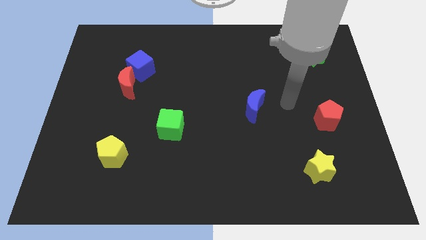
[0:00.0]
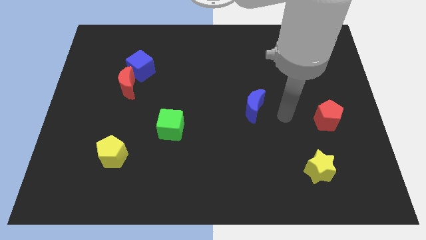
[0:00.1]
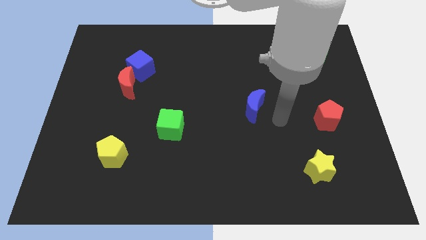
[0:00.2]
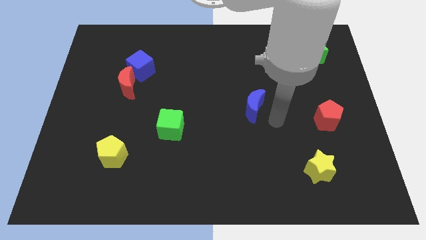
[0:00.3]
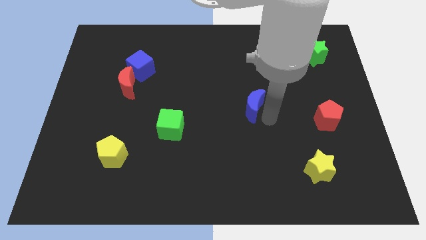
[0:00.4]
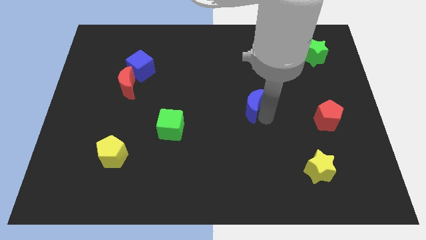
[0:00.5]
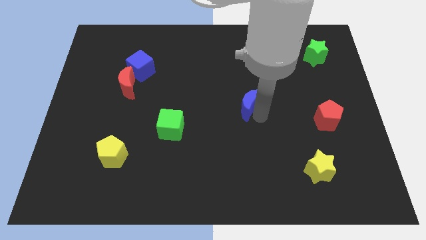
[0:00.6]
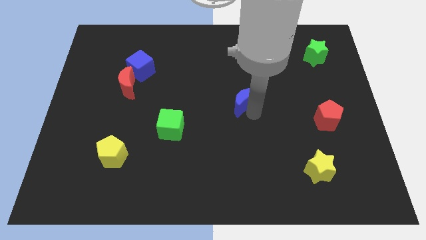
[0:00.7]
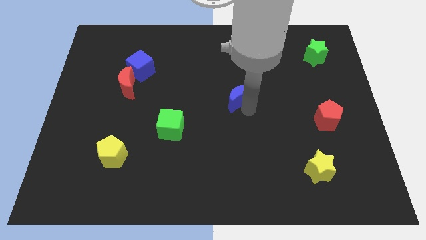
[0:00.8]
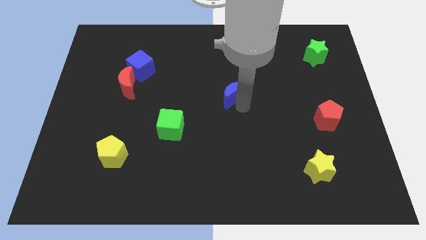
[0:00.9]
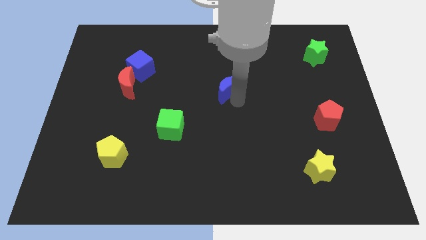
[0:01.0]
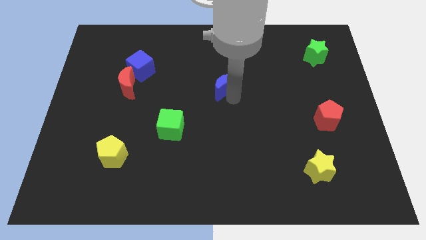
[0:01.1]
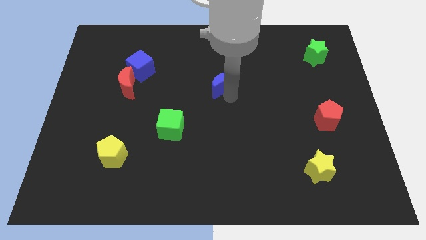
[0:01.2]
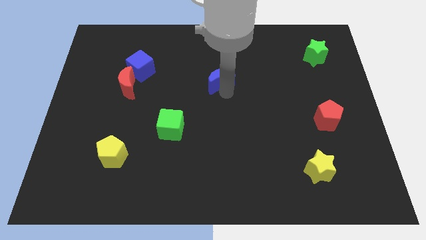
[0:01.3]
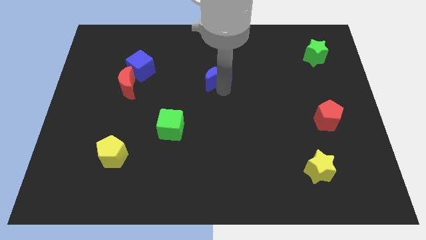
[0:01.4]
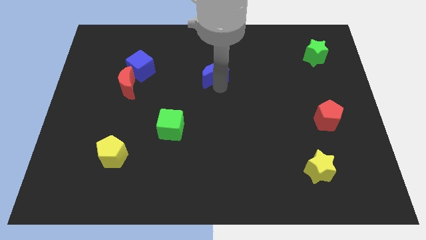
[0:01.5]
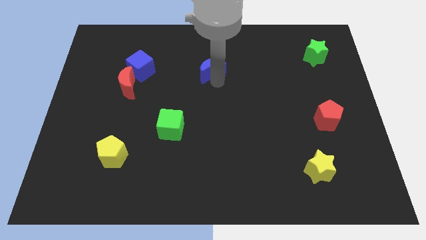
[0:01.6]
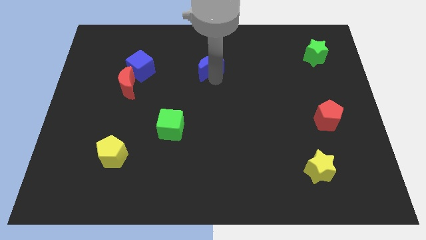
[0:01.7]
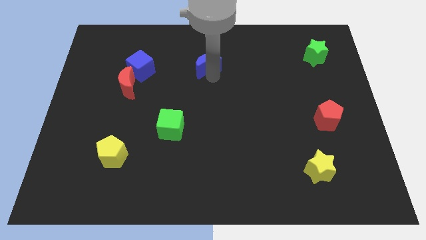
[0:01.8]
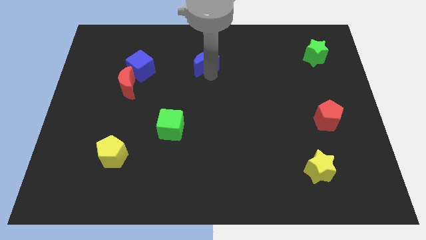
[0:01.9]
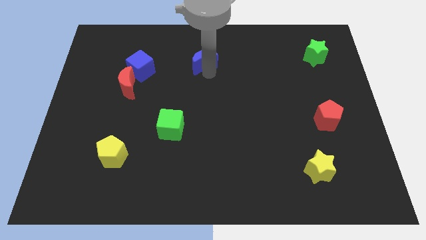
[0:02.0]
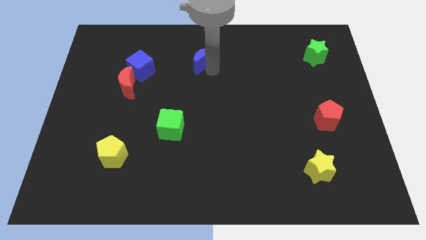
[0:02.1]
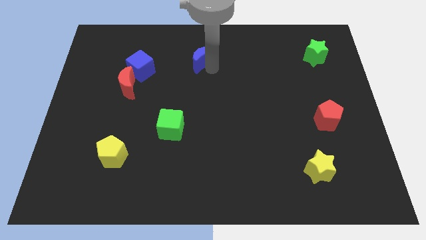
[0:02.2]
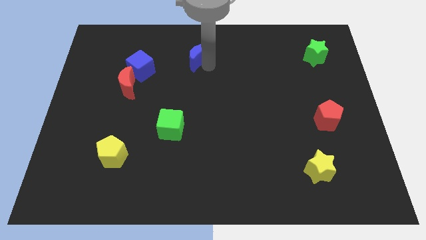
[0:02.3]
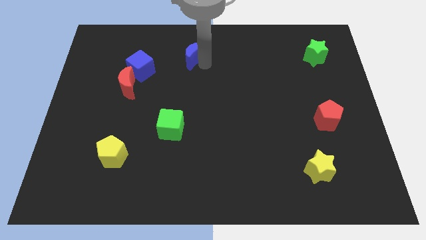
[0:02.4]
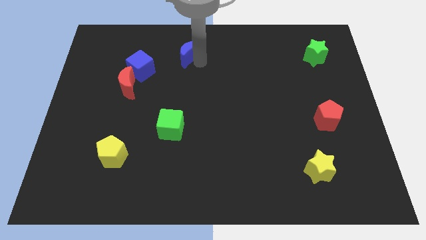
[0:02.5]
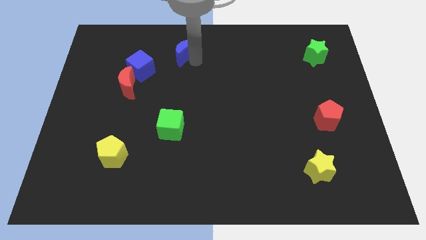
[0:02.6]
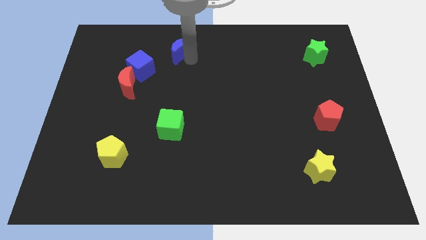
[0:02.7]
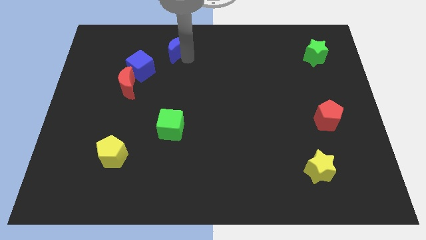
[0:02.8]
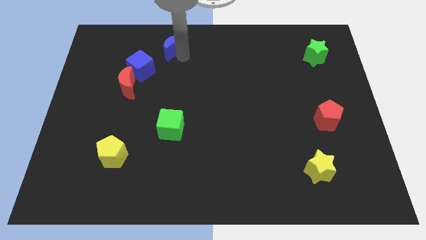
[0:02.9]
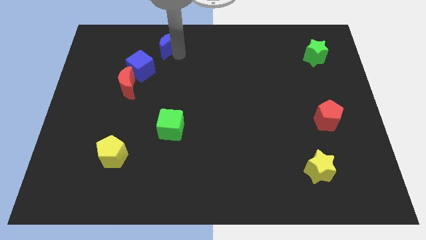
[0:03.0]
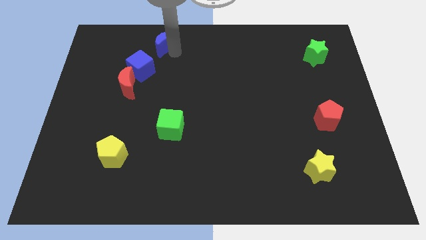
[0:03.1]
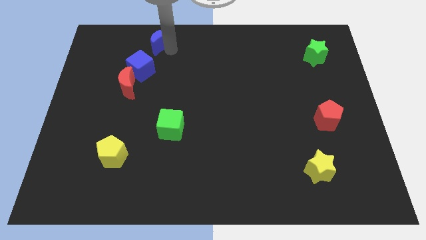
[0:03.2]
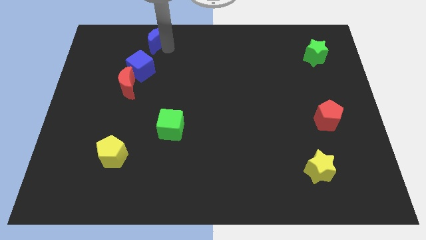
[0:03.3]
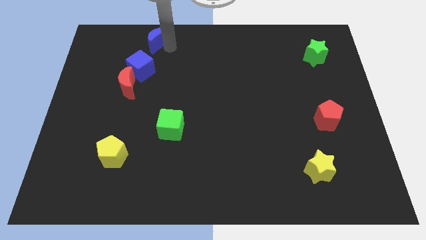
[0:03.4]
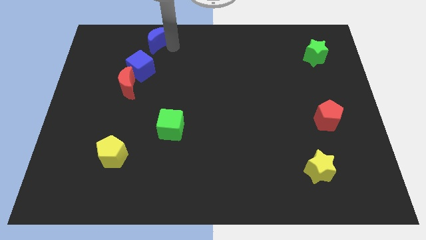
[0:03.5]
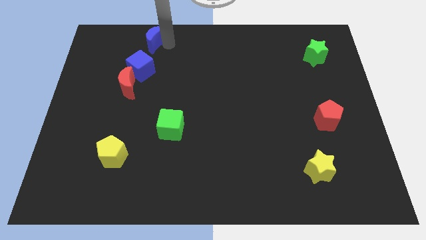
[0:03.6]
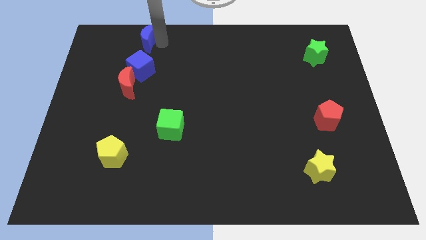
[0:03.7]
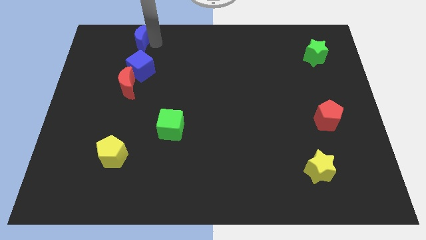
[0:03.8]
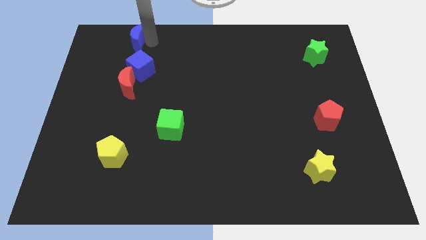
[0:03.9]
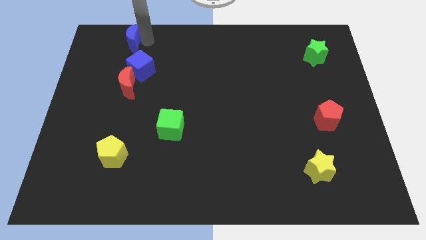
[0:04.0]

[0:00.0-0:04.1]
put the blue crescent above the blue cube

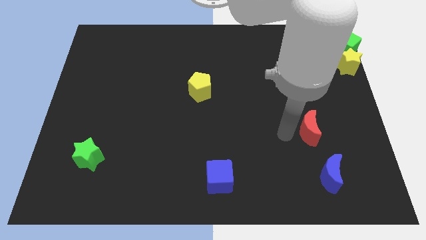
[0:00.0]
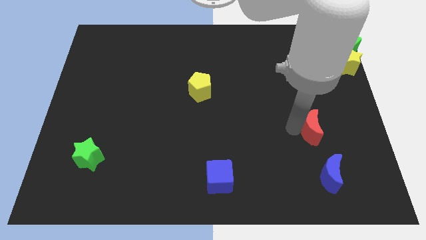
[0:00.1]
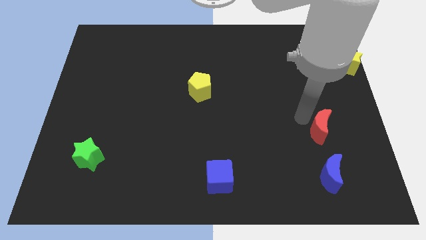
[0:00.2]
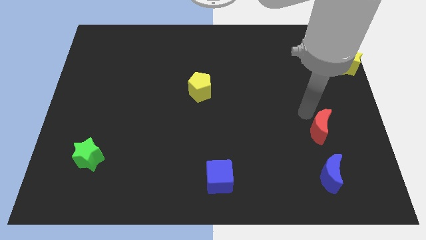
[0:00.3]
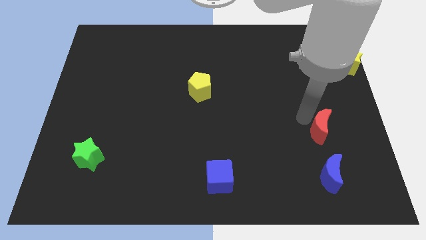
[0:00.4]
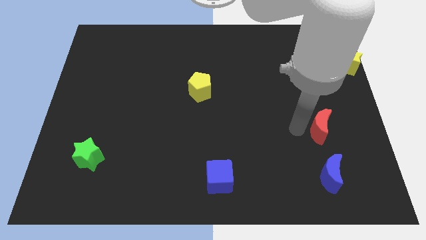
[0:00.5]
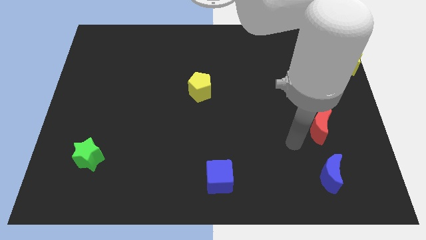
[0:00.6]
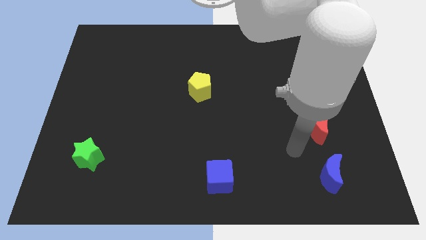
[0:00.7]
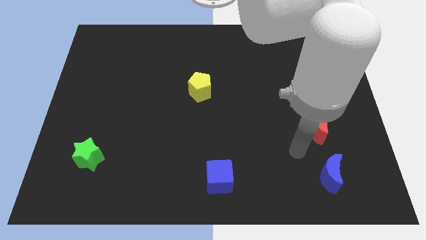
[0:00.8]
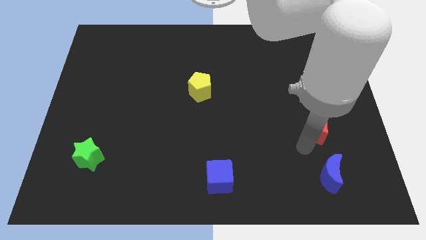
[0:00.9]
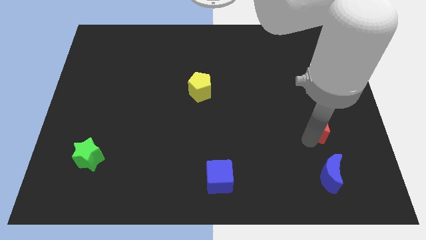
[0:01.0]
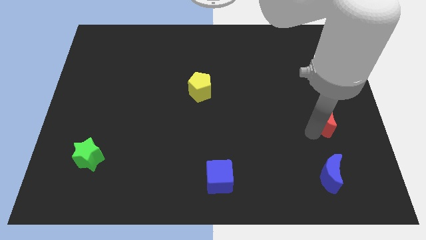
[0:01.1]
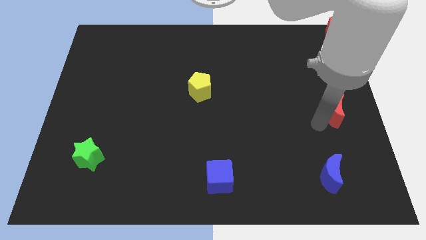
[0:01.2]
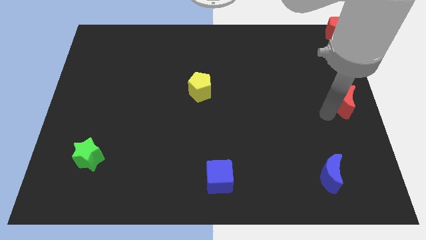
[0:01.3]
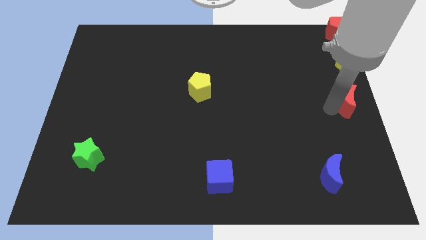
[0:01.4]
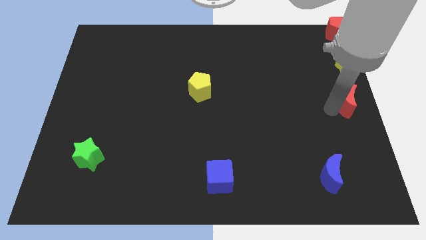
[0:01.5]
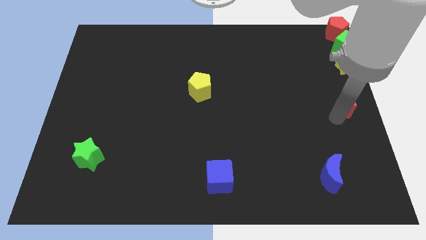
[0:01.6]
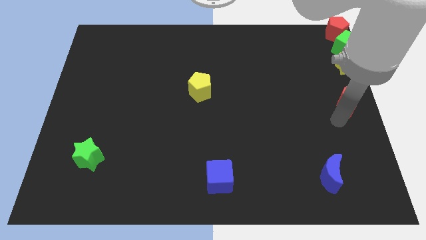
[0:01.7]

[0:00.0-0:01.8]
push the red crescent diagonally in between the yellow star and blue crescent

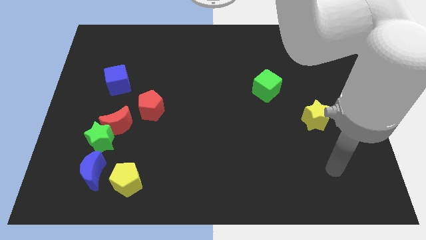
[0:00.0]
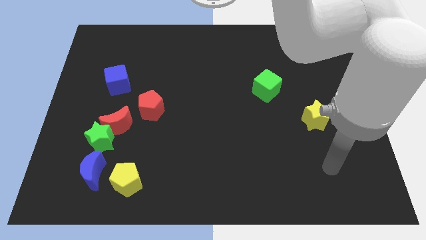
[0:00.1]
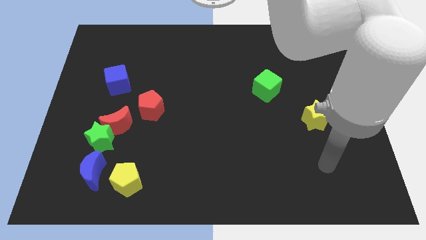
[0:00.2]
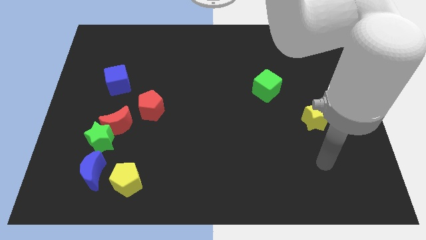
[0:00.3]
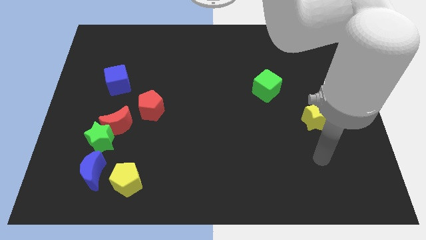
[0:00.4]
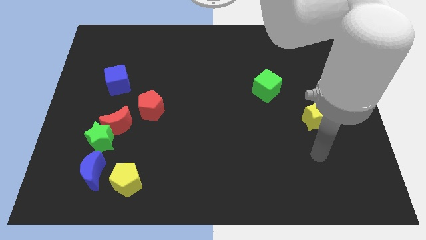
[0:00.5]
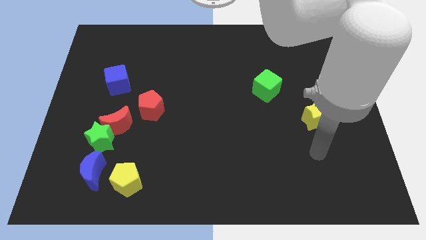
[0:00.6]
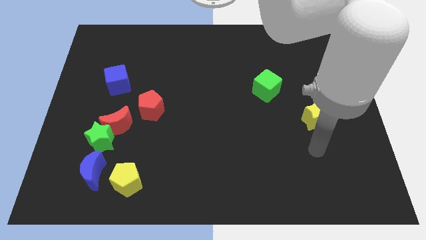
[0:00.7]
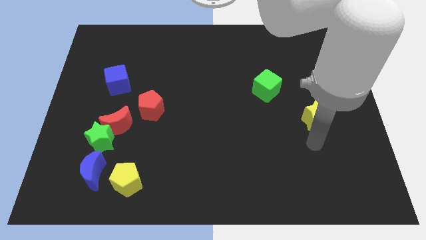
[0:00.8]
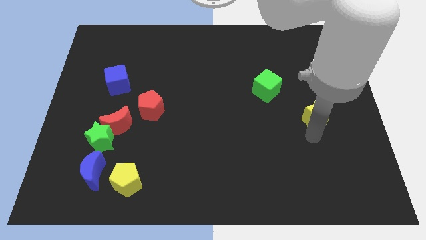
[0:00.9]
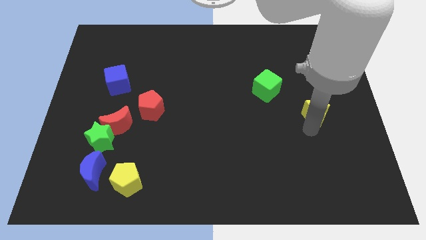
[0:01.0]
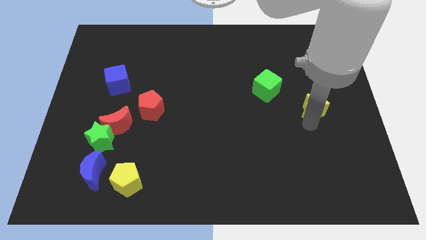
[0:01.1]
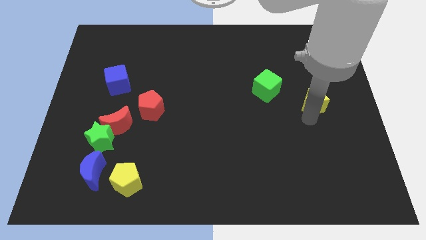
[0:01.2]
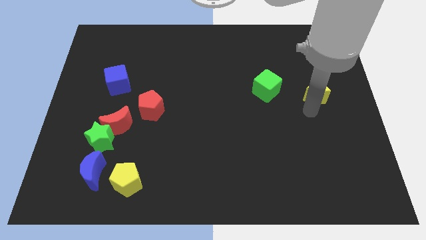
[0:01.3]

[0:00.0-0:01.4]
place the yellow star to the right side of the green cube

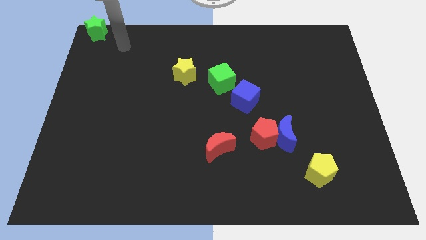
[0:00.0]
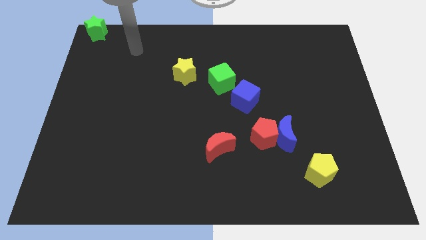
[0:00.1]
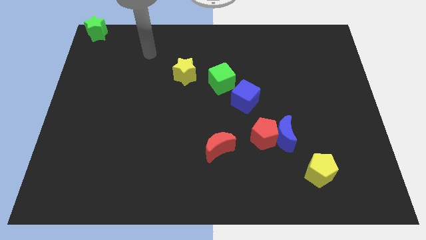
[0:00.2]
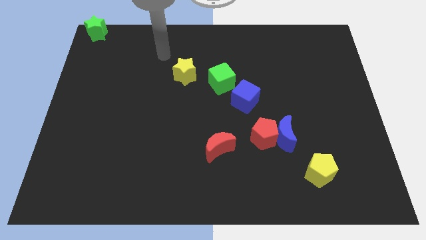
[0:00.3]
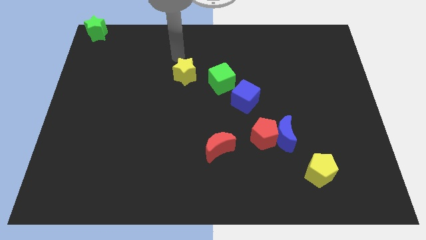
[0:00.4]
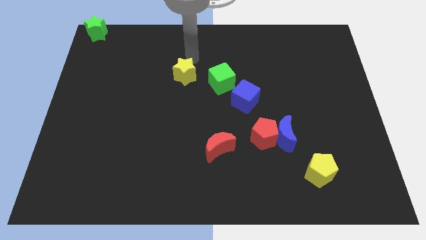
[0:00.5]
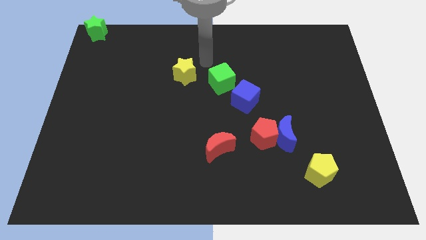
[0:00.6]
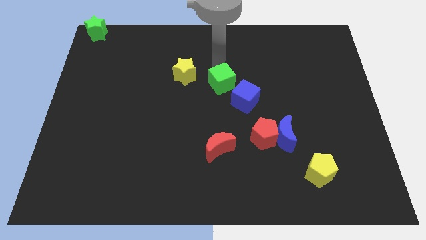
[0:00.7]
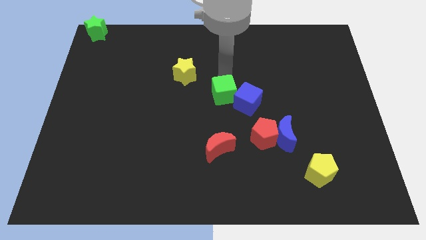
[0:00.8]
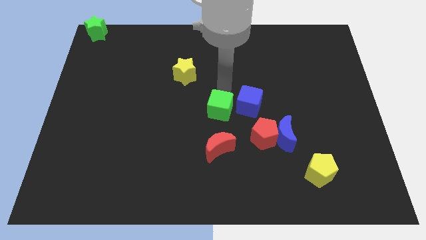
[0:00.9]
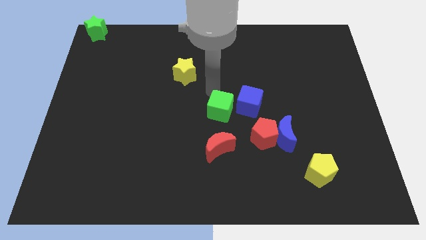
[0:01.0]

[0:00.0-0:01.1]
push the green cube to the left side of the blue cube

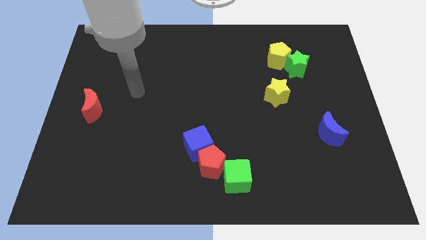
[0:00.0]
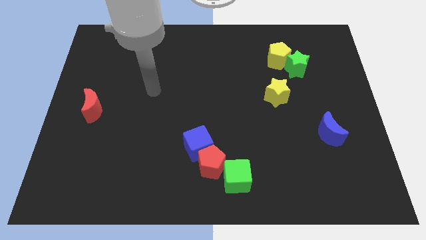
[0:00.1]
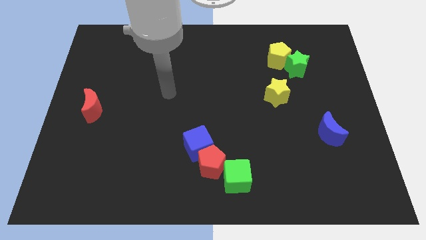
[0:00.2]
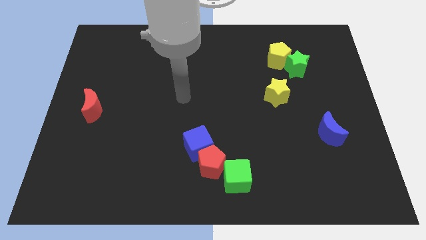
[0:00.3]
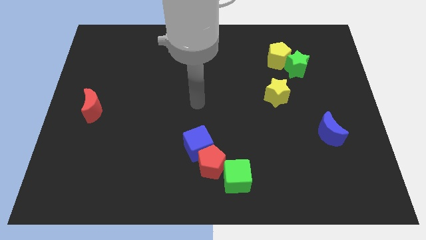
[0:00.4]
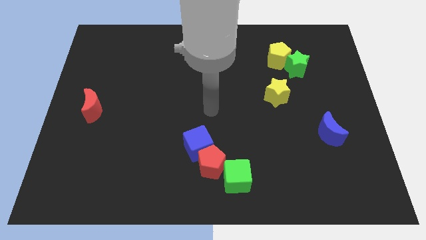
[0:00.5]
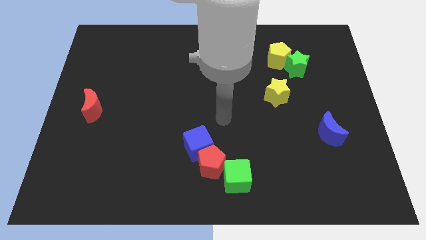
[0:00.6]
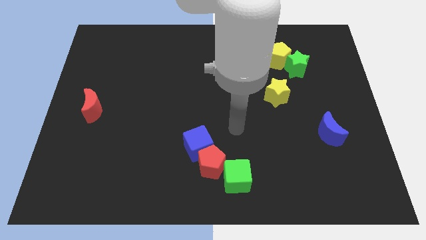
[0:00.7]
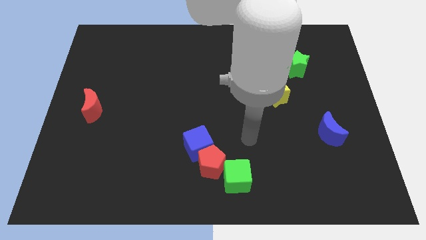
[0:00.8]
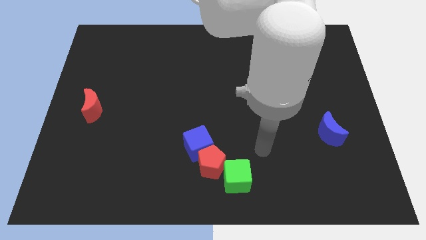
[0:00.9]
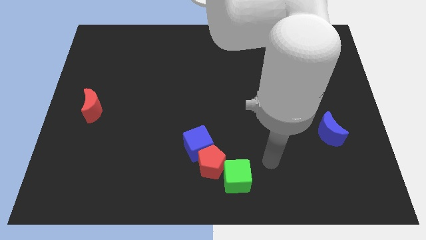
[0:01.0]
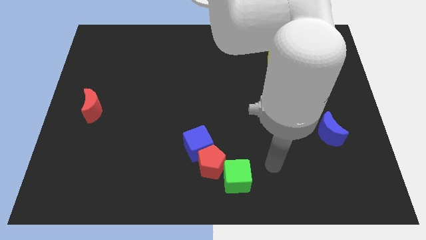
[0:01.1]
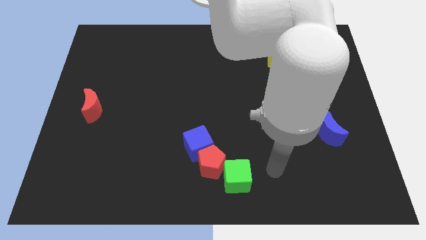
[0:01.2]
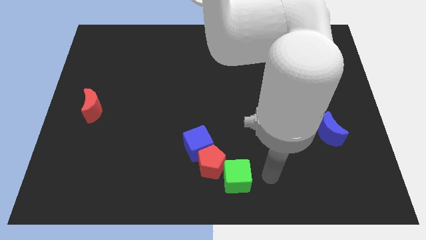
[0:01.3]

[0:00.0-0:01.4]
move your arm away from the red moon
